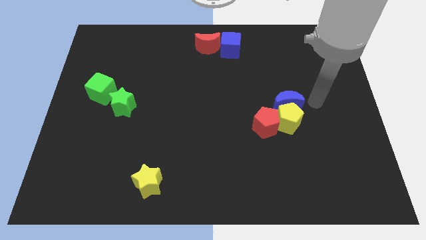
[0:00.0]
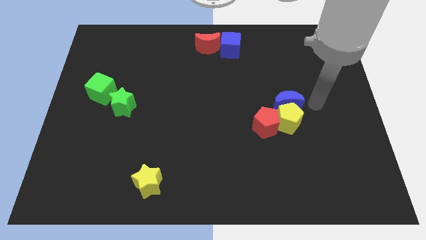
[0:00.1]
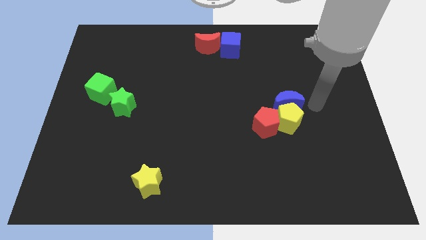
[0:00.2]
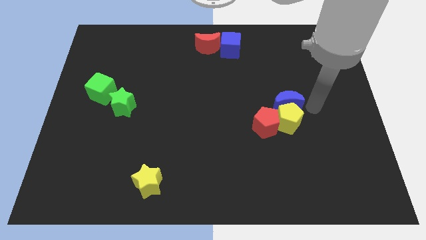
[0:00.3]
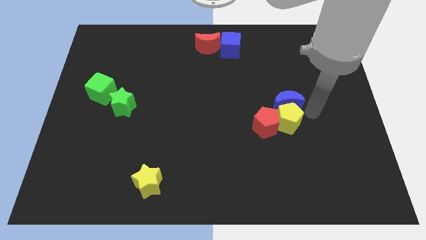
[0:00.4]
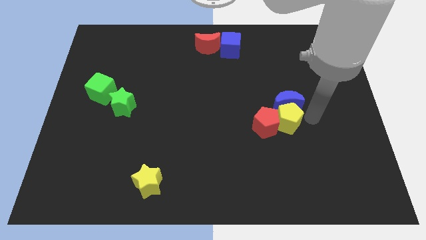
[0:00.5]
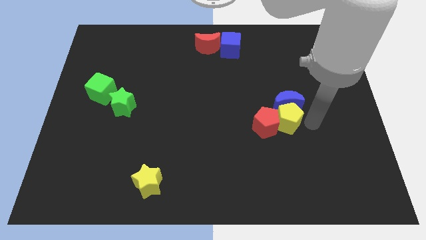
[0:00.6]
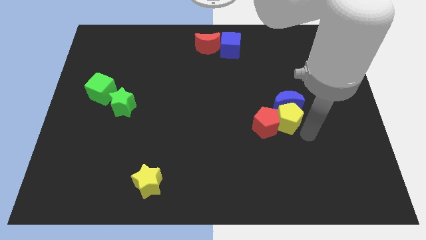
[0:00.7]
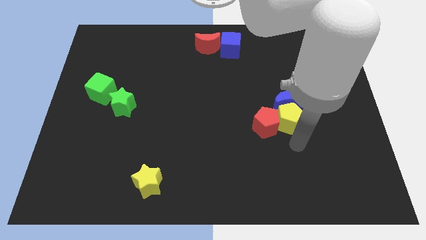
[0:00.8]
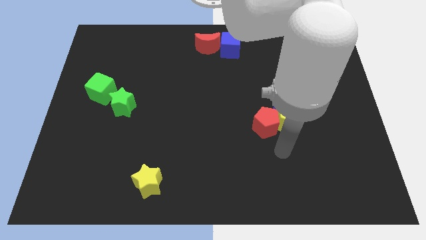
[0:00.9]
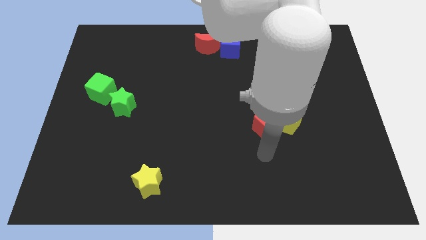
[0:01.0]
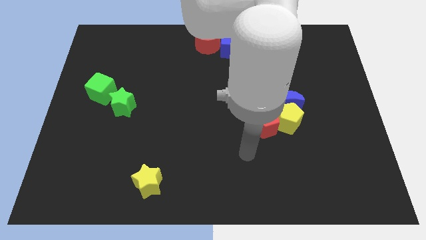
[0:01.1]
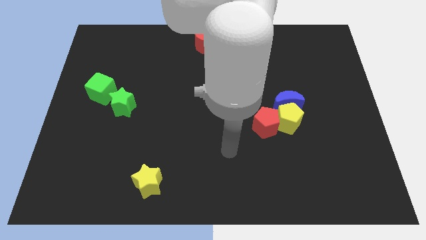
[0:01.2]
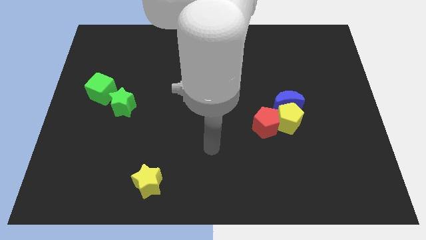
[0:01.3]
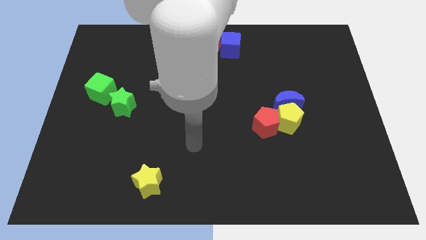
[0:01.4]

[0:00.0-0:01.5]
place your arm in between the yellow star and red pentagon

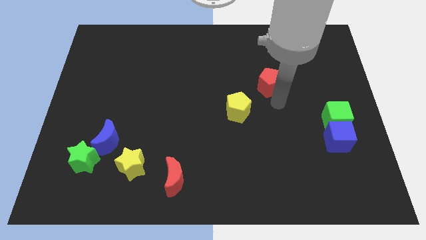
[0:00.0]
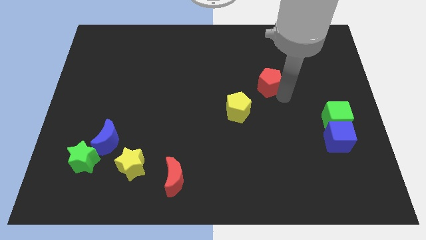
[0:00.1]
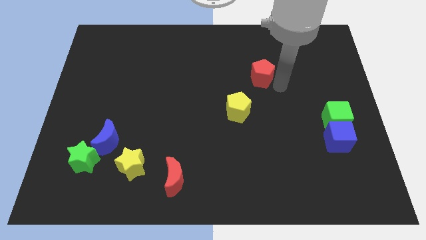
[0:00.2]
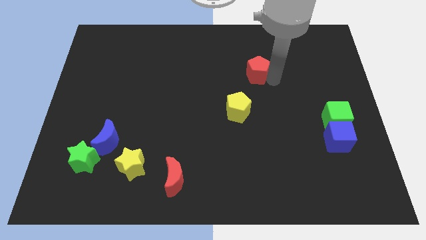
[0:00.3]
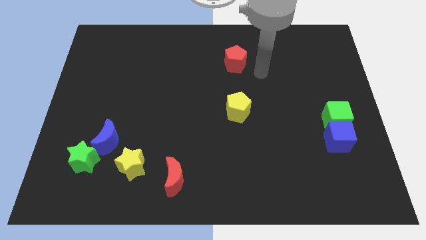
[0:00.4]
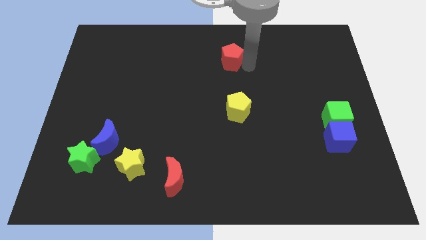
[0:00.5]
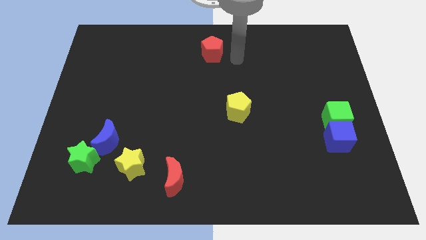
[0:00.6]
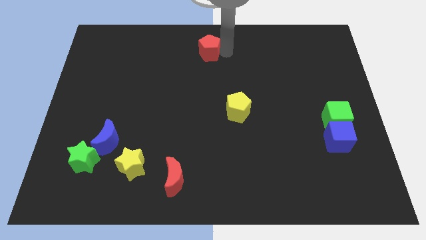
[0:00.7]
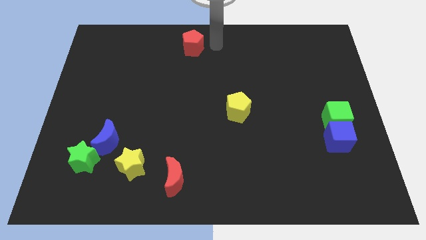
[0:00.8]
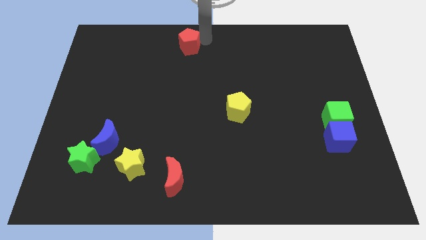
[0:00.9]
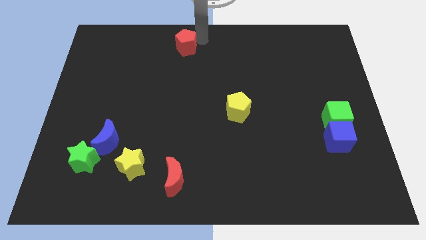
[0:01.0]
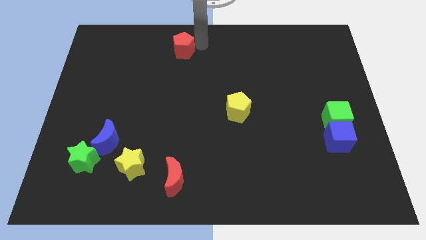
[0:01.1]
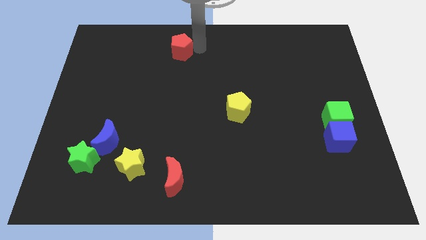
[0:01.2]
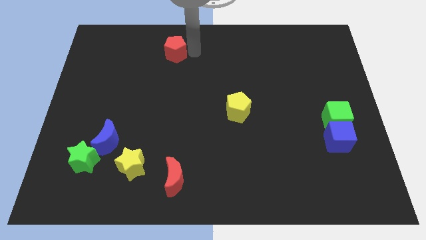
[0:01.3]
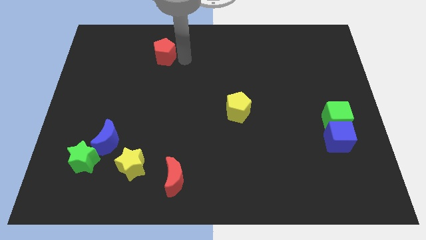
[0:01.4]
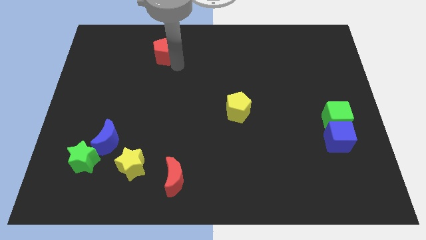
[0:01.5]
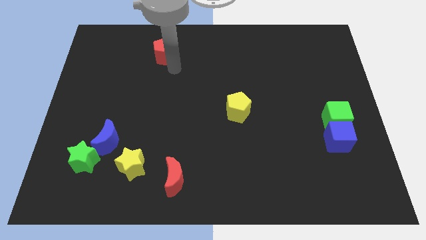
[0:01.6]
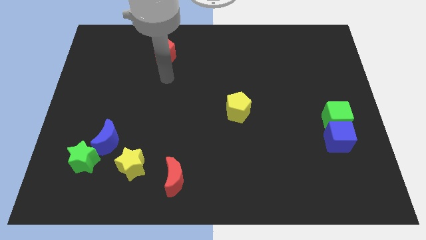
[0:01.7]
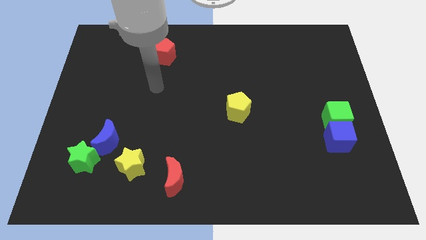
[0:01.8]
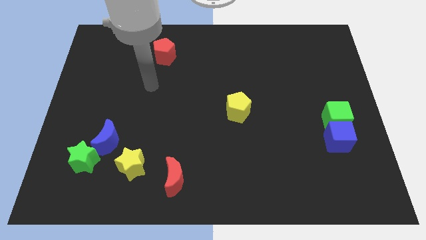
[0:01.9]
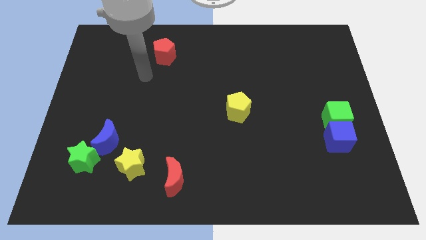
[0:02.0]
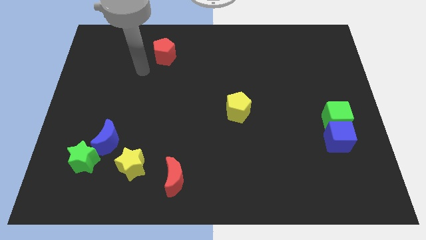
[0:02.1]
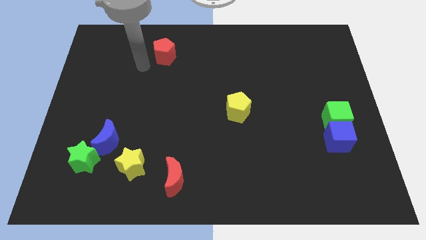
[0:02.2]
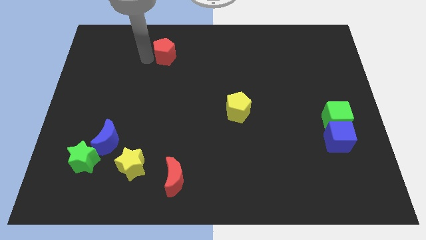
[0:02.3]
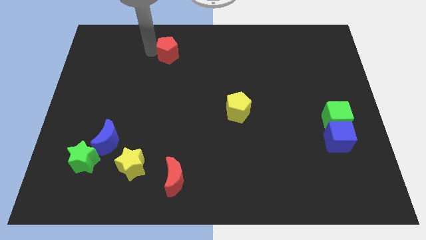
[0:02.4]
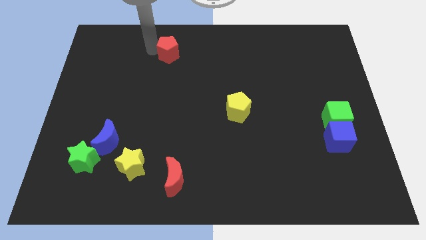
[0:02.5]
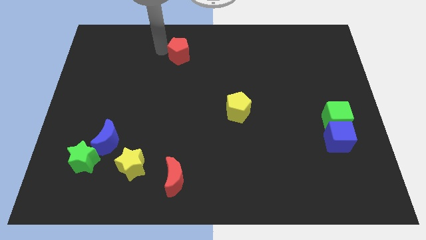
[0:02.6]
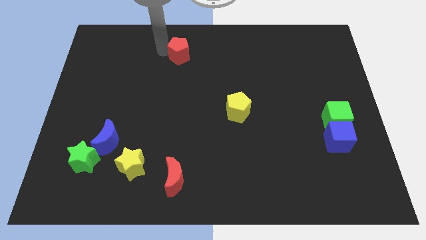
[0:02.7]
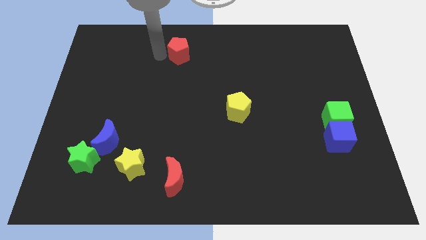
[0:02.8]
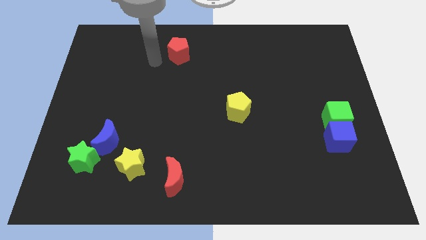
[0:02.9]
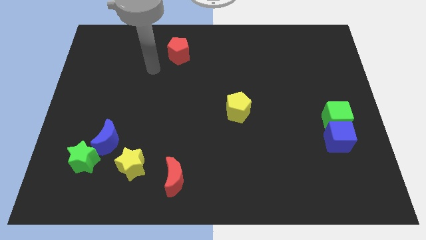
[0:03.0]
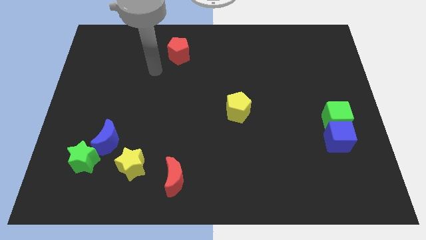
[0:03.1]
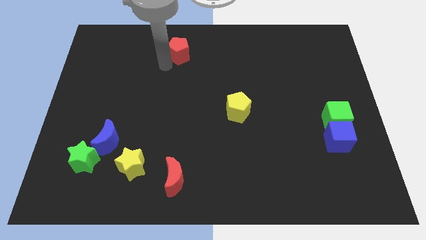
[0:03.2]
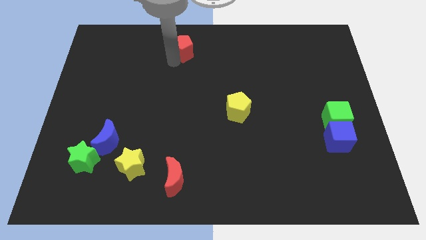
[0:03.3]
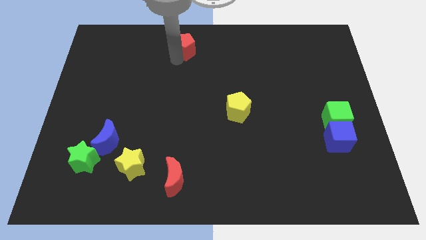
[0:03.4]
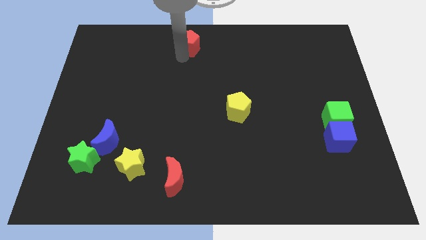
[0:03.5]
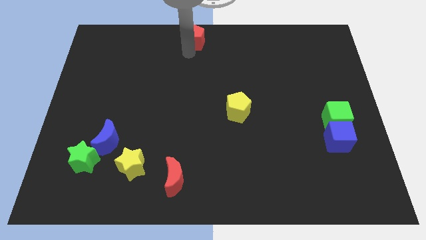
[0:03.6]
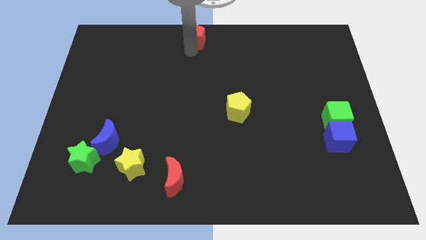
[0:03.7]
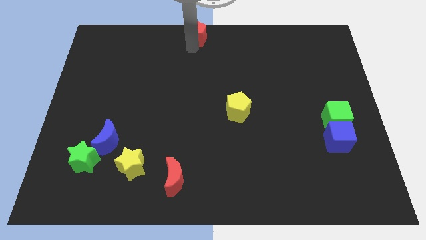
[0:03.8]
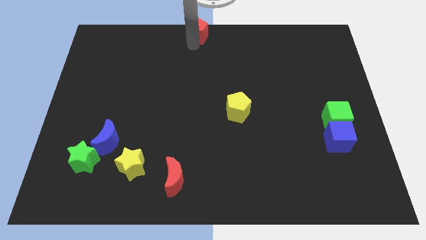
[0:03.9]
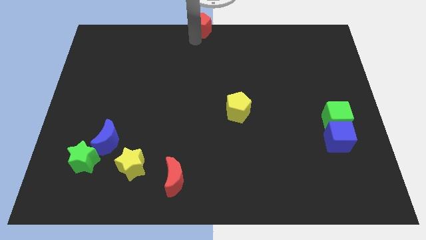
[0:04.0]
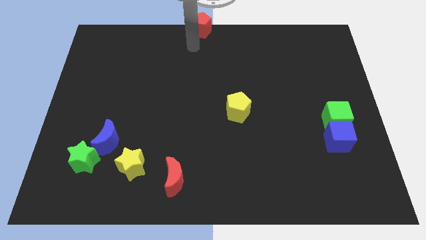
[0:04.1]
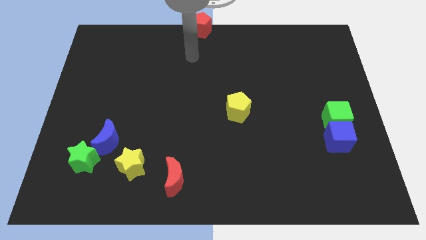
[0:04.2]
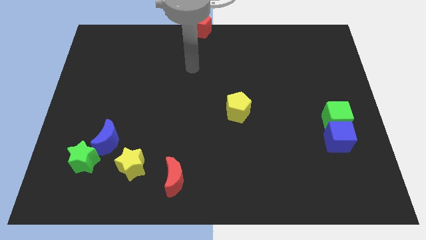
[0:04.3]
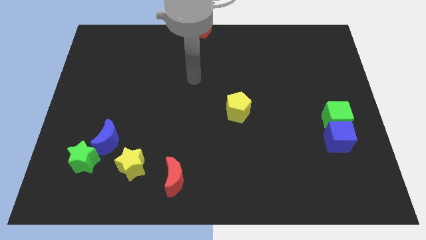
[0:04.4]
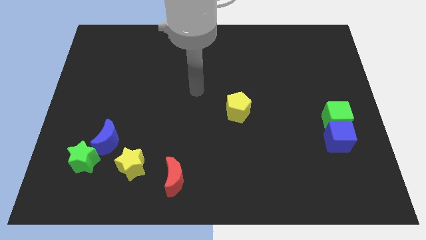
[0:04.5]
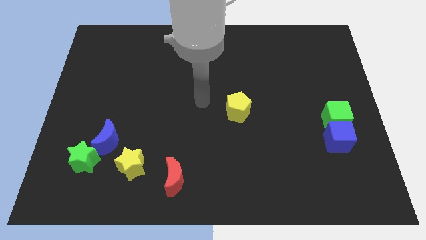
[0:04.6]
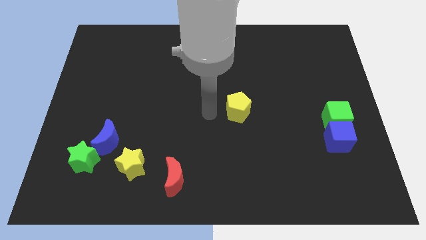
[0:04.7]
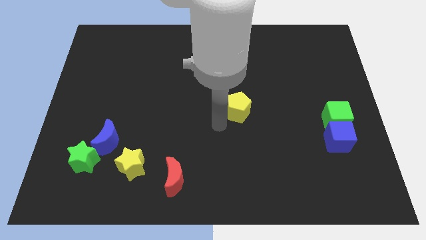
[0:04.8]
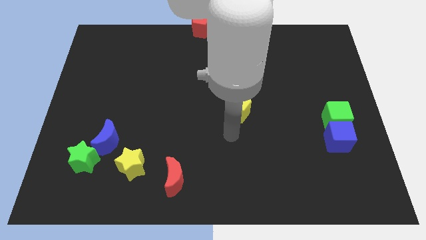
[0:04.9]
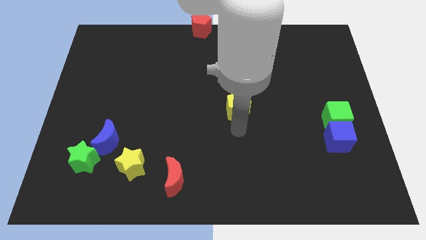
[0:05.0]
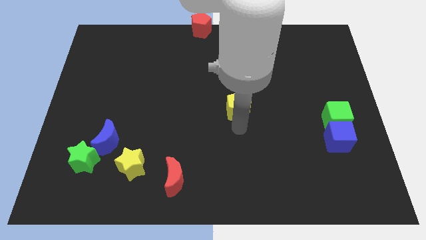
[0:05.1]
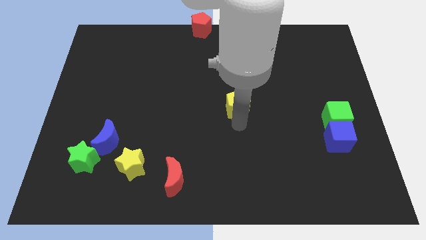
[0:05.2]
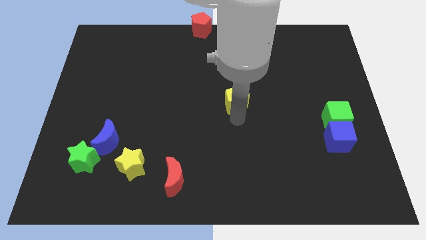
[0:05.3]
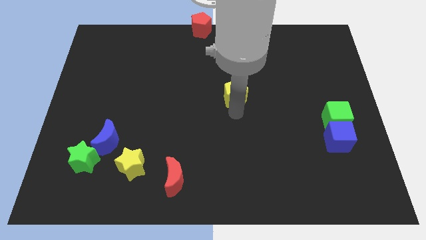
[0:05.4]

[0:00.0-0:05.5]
move the red pentagon to top center of the board

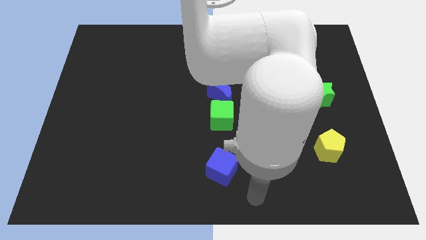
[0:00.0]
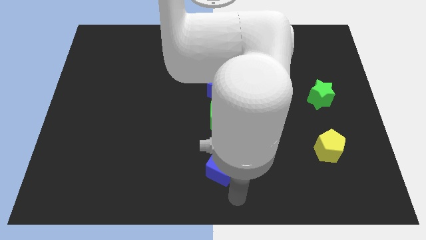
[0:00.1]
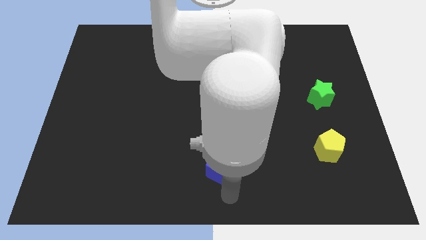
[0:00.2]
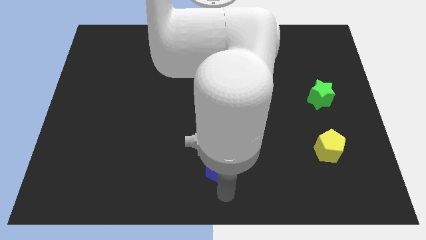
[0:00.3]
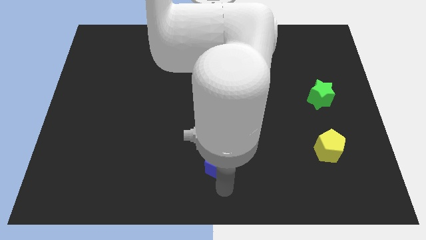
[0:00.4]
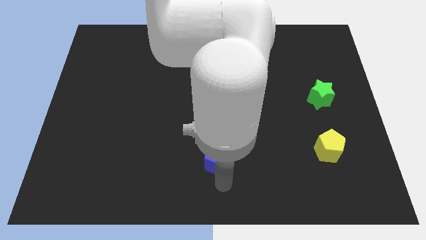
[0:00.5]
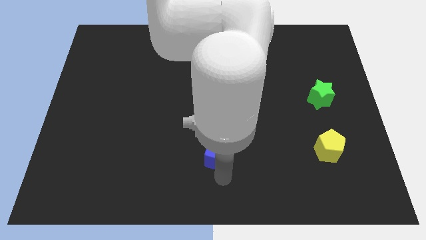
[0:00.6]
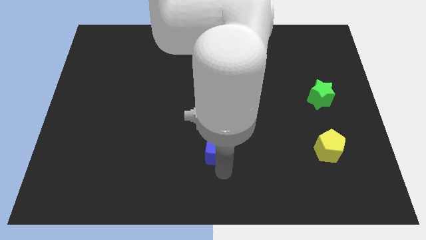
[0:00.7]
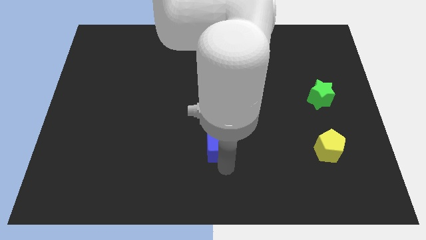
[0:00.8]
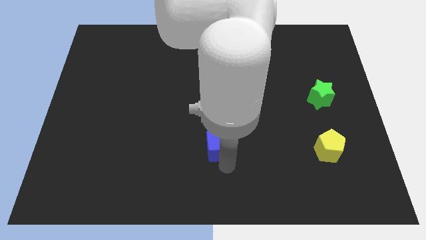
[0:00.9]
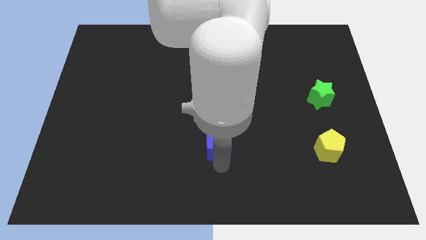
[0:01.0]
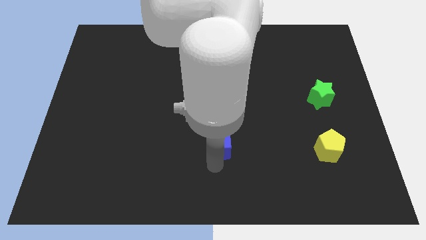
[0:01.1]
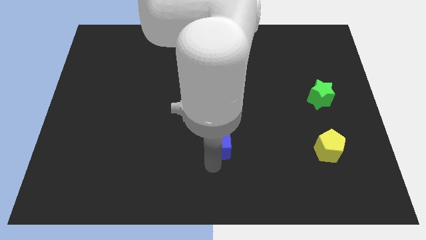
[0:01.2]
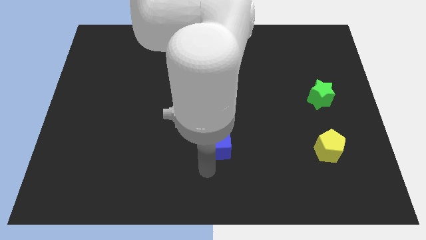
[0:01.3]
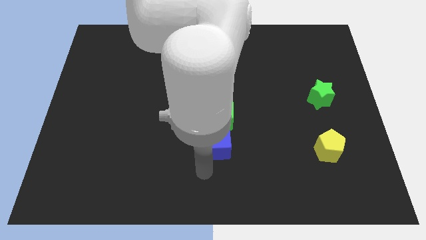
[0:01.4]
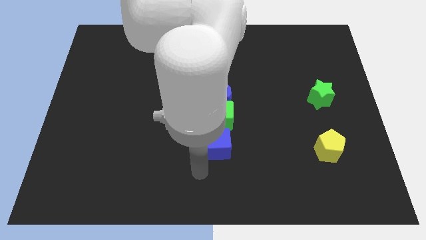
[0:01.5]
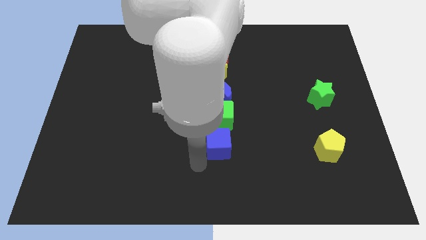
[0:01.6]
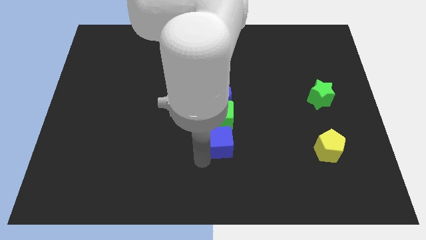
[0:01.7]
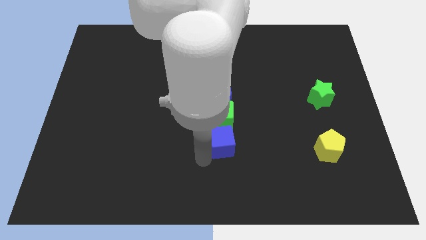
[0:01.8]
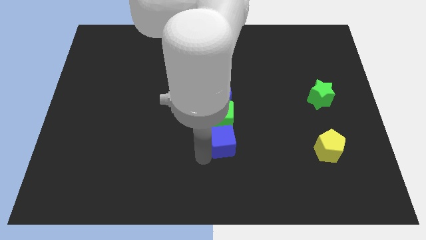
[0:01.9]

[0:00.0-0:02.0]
place the blue cube below the green cube
